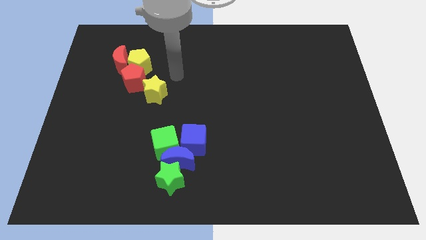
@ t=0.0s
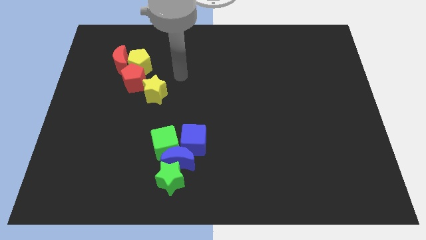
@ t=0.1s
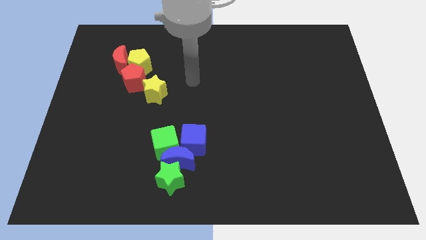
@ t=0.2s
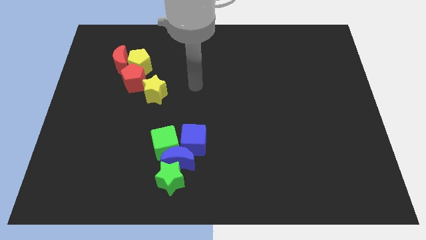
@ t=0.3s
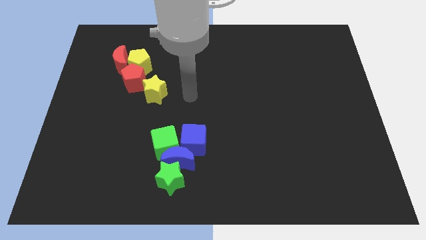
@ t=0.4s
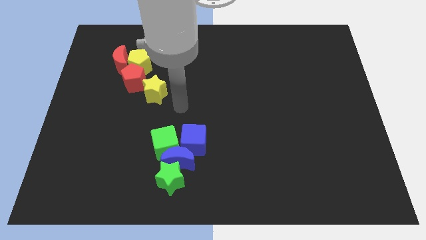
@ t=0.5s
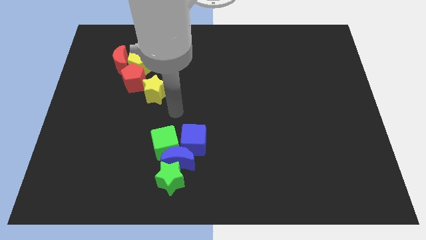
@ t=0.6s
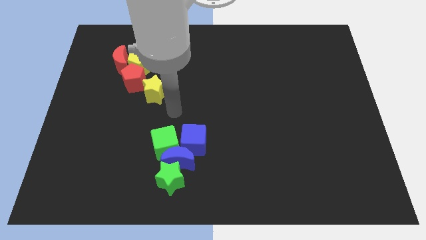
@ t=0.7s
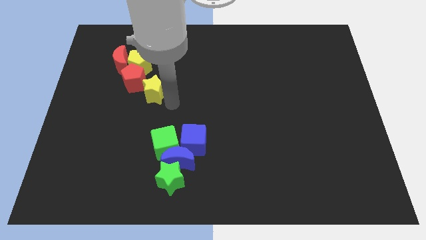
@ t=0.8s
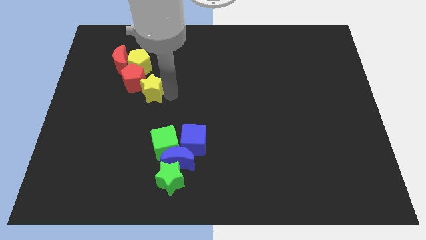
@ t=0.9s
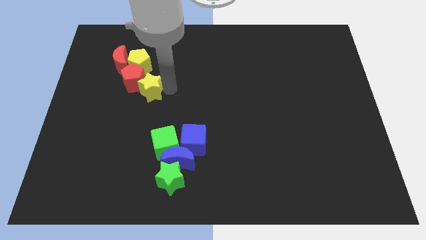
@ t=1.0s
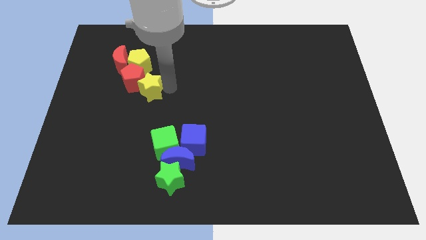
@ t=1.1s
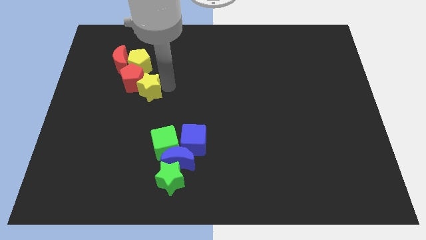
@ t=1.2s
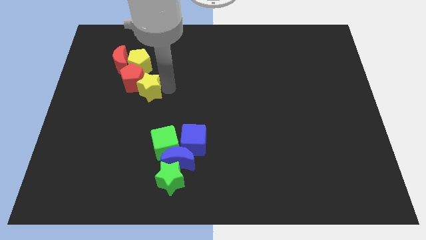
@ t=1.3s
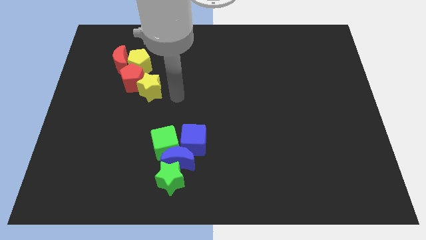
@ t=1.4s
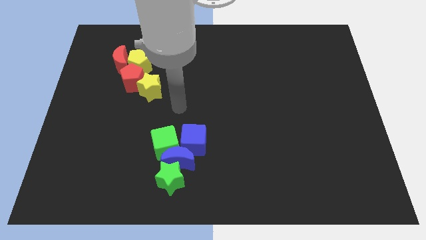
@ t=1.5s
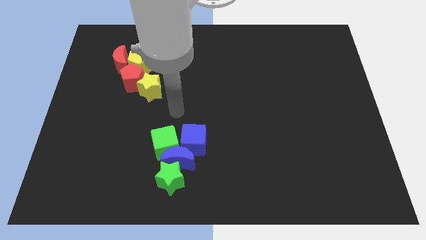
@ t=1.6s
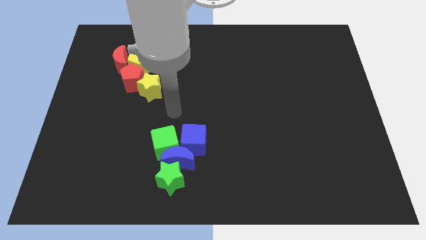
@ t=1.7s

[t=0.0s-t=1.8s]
move yellow star right below the red pentagon

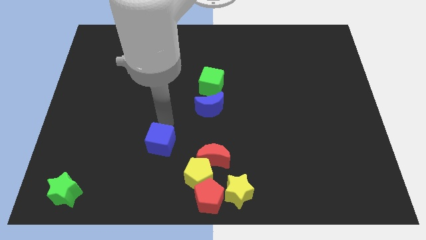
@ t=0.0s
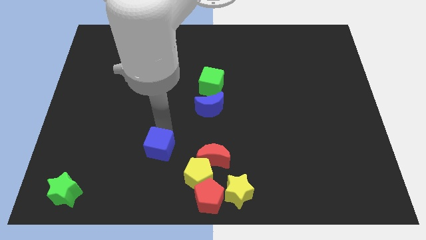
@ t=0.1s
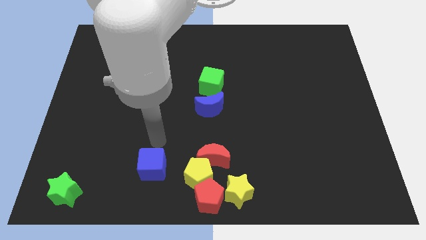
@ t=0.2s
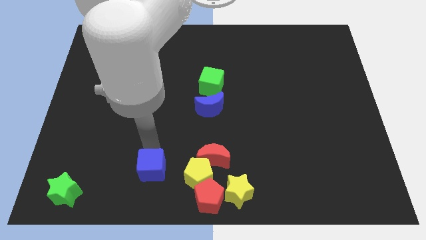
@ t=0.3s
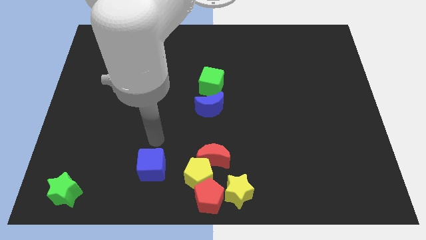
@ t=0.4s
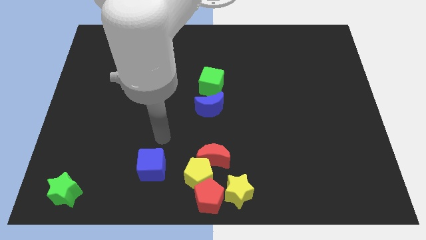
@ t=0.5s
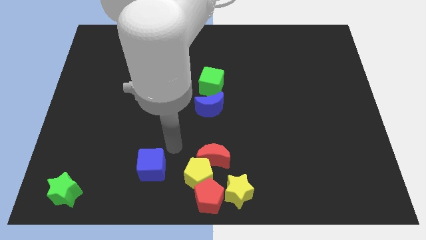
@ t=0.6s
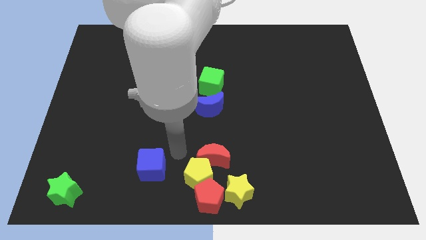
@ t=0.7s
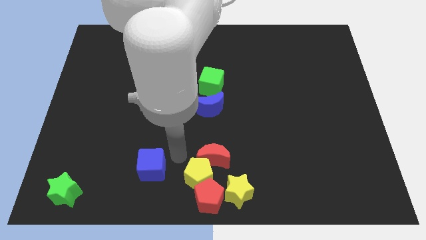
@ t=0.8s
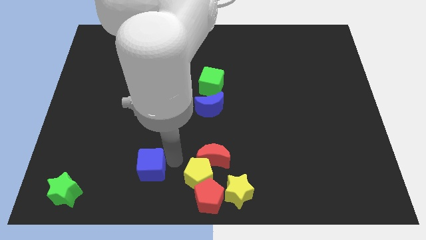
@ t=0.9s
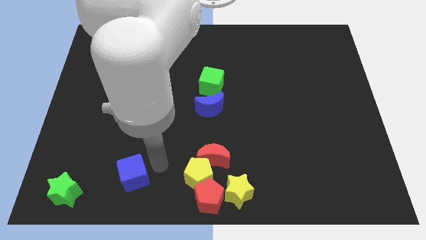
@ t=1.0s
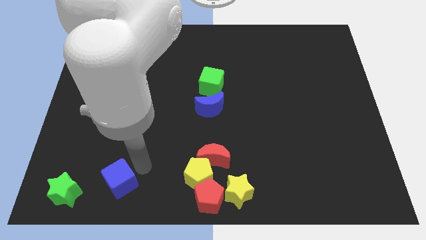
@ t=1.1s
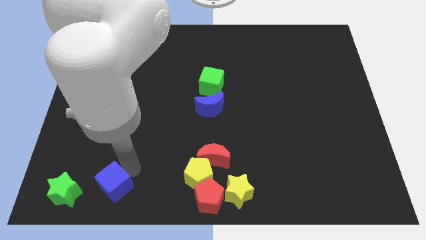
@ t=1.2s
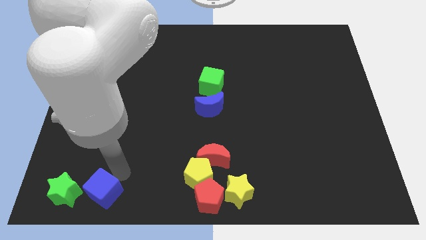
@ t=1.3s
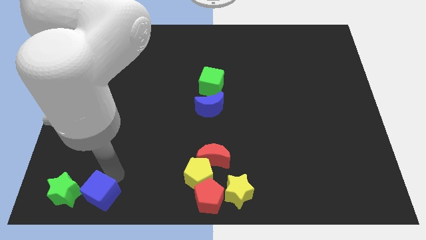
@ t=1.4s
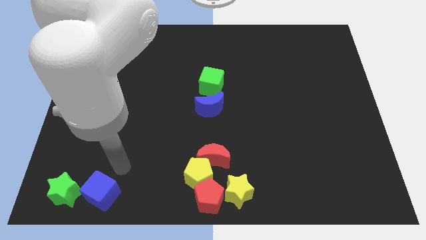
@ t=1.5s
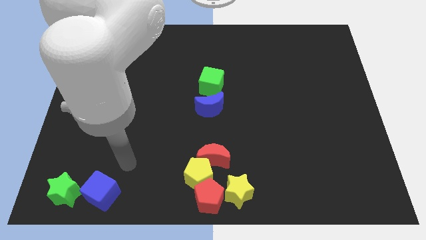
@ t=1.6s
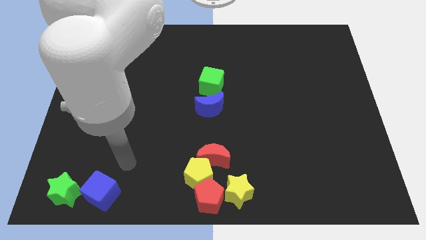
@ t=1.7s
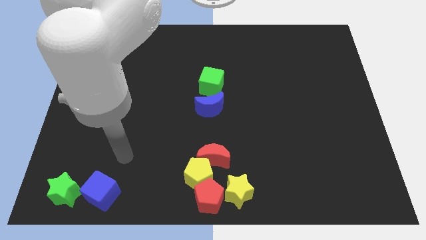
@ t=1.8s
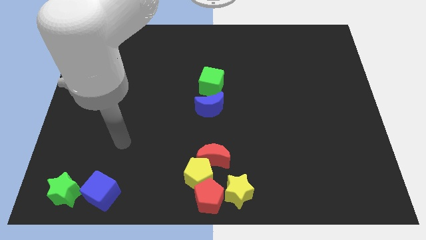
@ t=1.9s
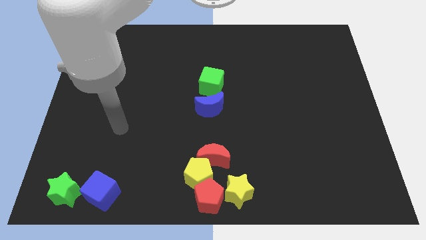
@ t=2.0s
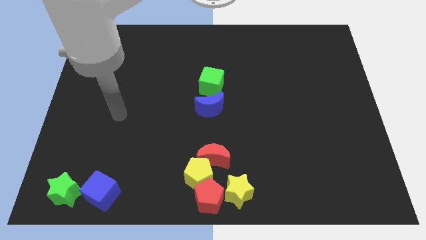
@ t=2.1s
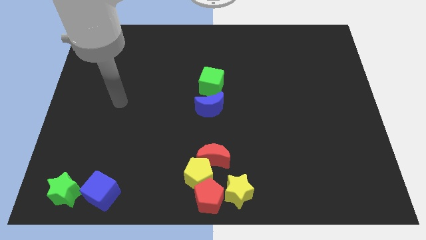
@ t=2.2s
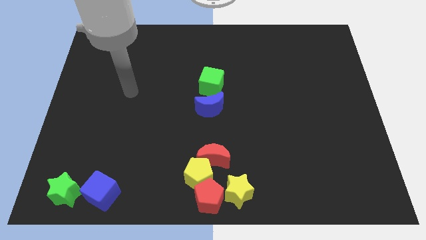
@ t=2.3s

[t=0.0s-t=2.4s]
place the blue cube to the right of the green star

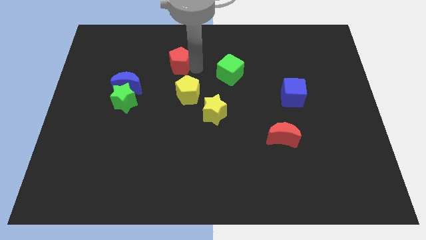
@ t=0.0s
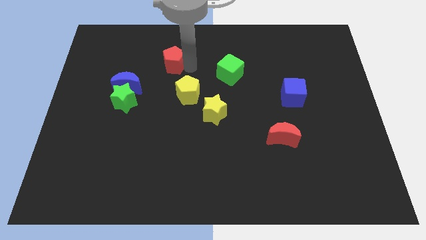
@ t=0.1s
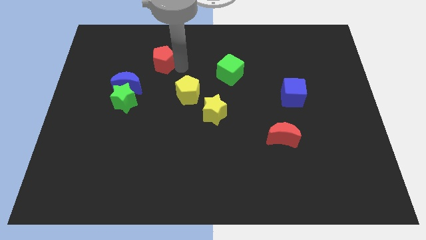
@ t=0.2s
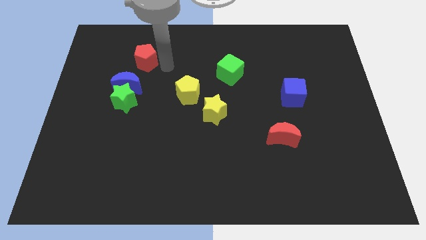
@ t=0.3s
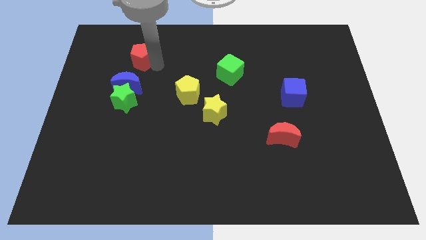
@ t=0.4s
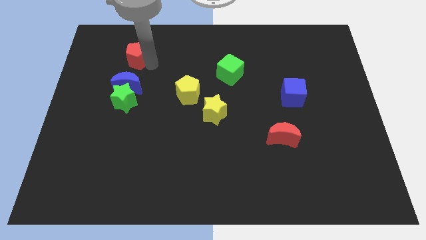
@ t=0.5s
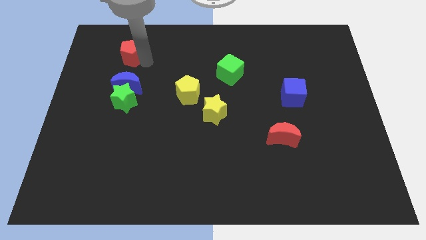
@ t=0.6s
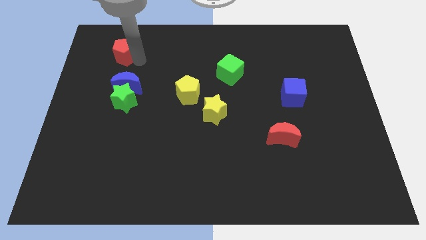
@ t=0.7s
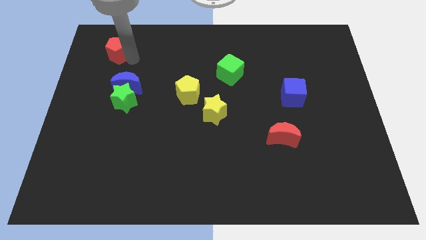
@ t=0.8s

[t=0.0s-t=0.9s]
place the red pentagon at the top of blue moon

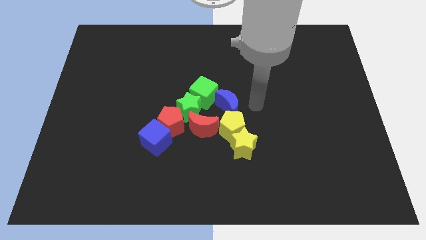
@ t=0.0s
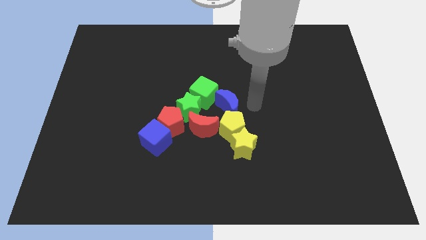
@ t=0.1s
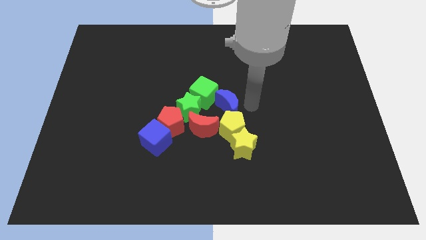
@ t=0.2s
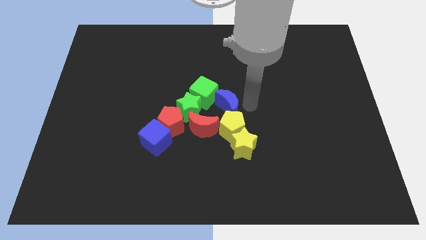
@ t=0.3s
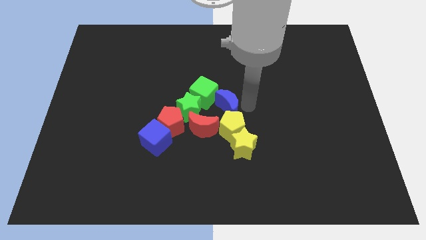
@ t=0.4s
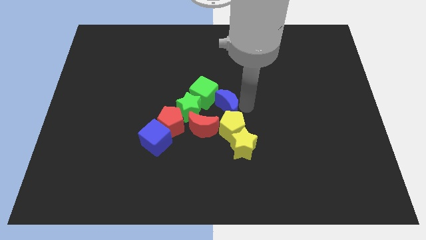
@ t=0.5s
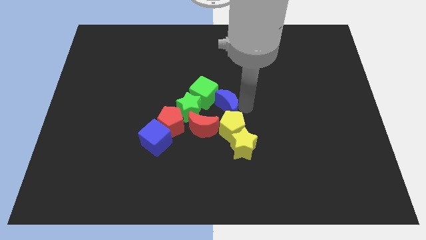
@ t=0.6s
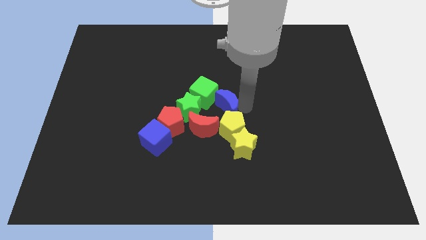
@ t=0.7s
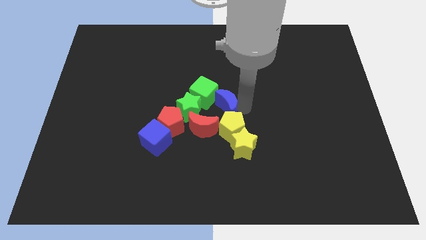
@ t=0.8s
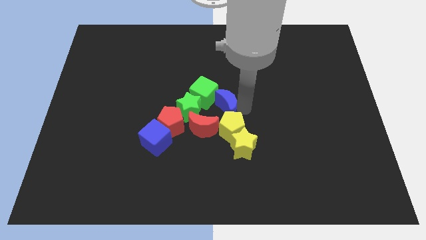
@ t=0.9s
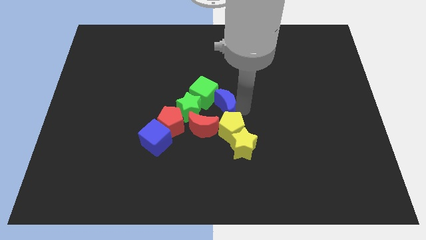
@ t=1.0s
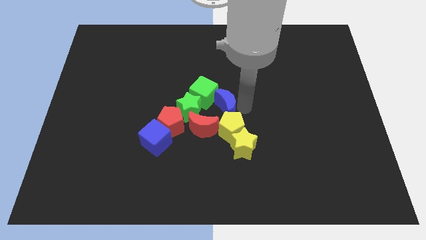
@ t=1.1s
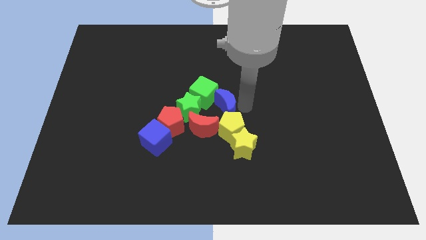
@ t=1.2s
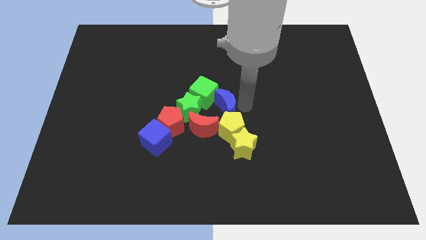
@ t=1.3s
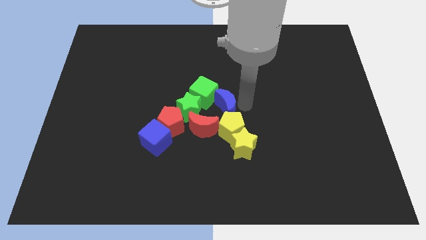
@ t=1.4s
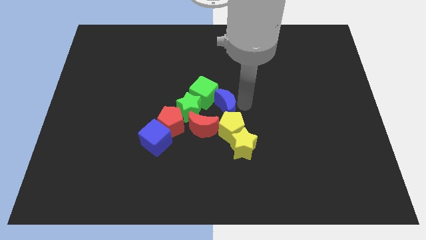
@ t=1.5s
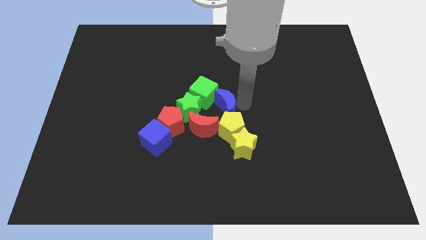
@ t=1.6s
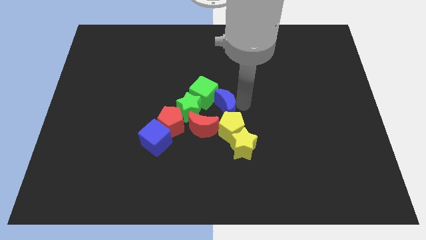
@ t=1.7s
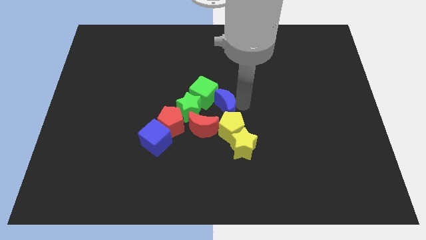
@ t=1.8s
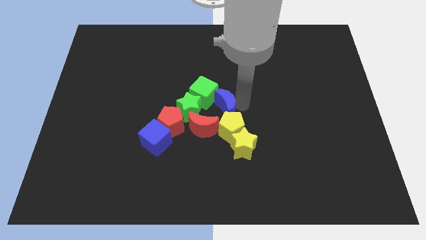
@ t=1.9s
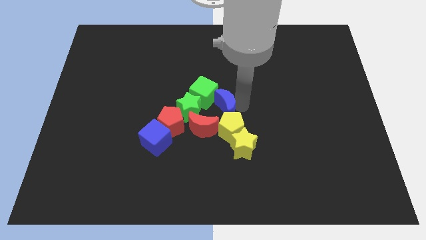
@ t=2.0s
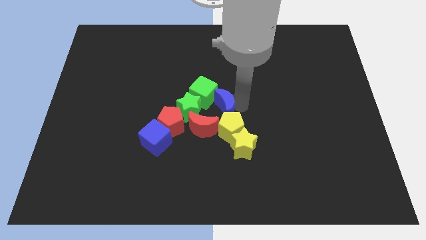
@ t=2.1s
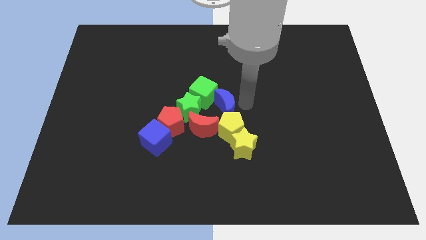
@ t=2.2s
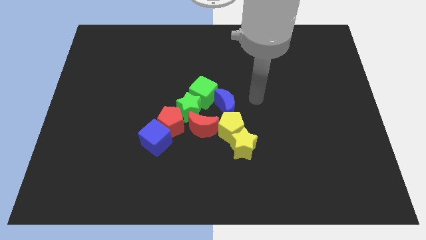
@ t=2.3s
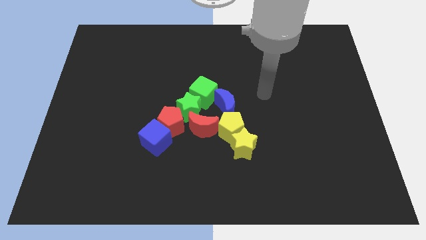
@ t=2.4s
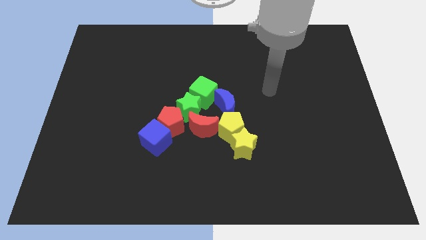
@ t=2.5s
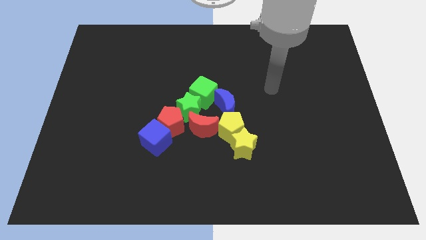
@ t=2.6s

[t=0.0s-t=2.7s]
push the blue crescent to the center of the board

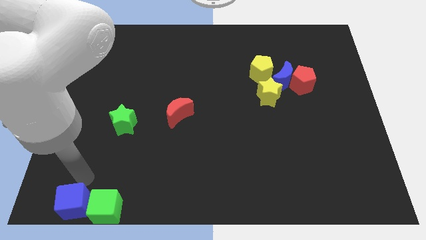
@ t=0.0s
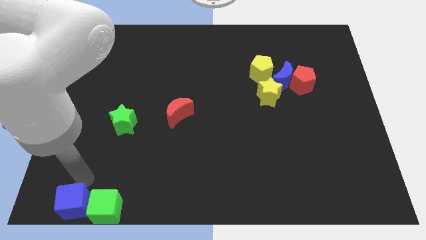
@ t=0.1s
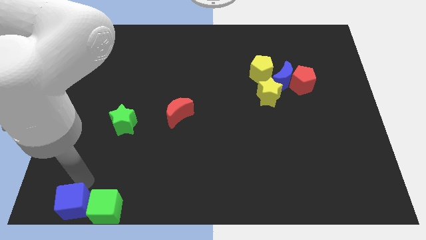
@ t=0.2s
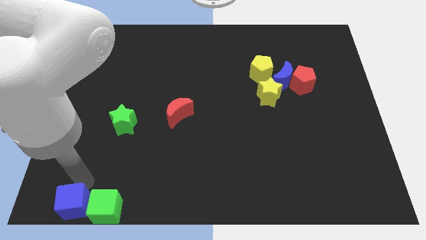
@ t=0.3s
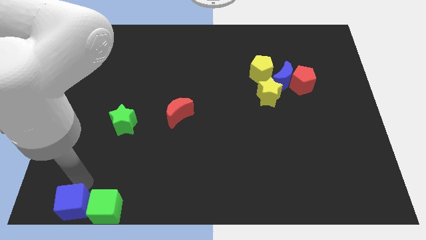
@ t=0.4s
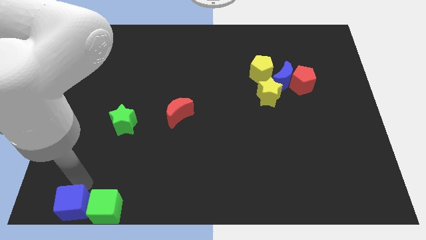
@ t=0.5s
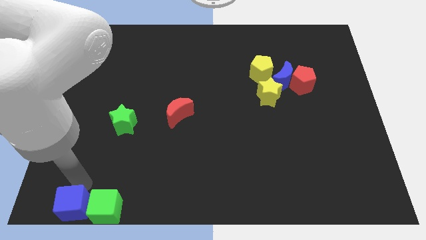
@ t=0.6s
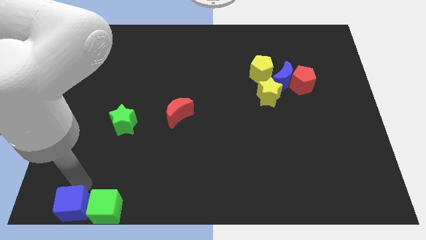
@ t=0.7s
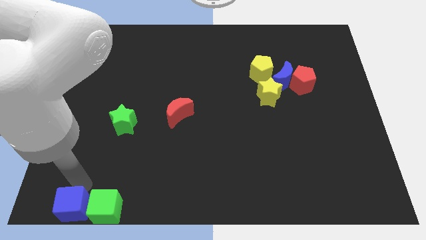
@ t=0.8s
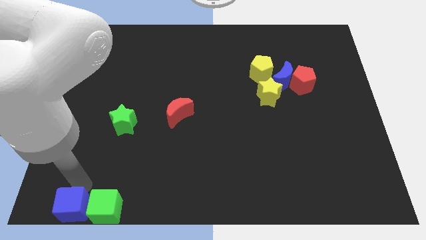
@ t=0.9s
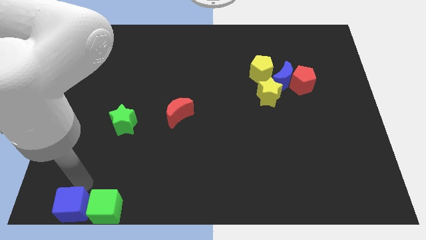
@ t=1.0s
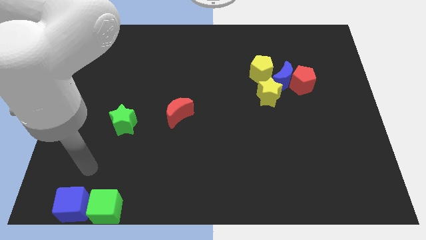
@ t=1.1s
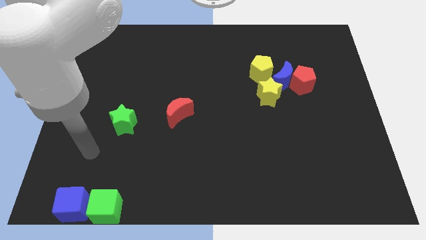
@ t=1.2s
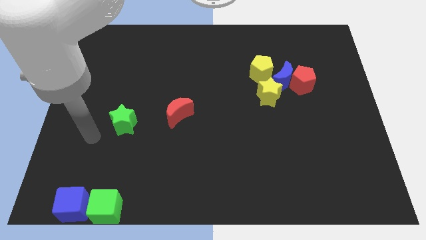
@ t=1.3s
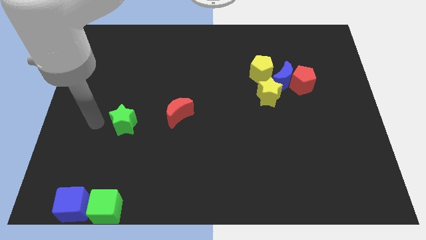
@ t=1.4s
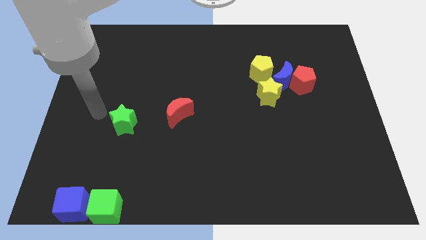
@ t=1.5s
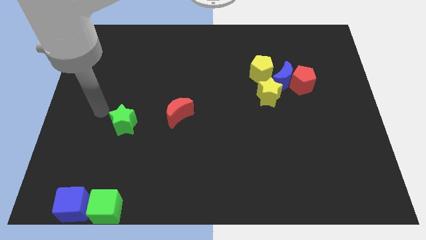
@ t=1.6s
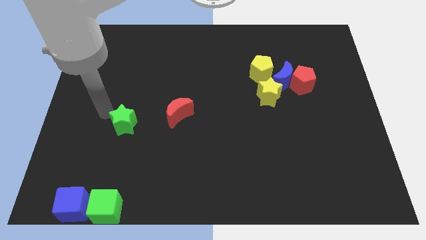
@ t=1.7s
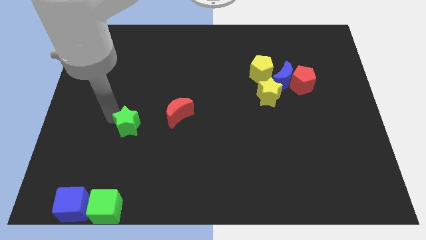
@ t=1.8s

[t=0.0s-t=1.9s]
go away from the blue cube
